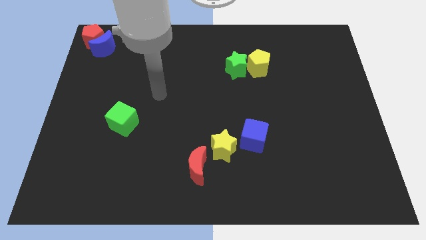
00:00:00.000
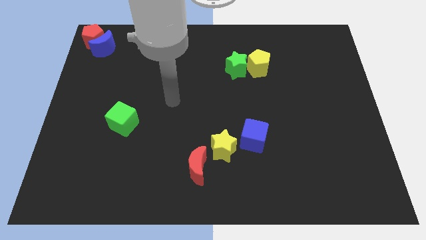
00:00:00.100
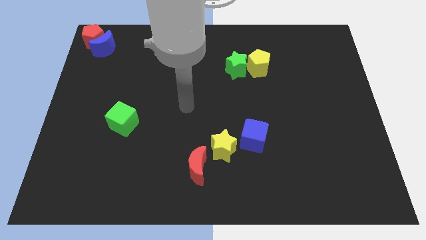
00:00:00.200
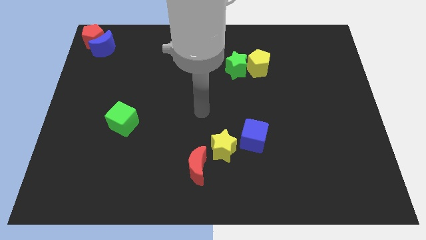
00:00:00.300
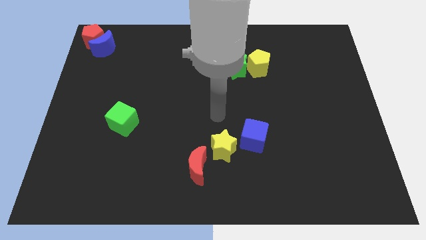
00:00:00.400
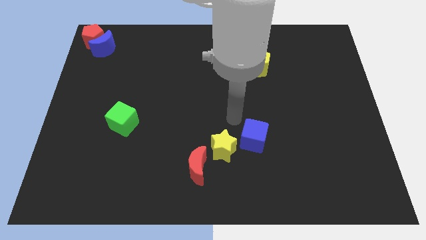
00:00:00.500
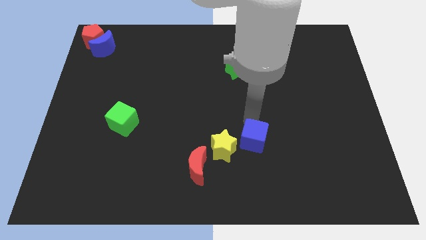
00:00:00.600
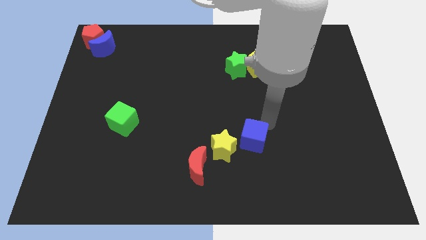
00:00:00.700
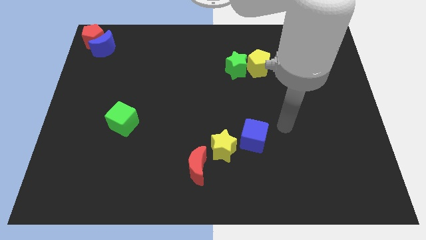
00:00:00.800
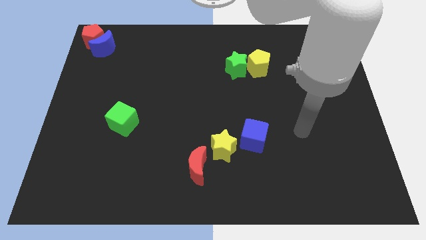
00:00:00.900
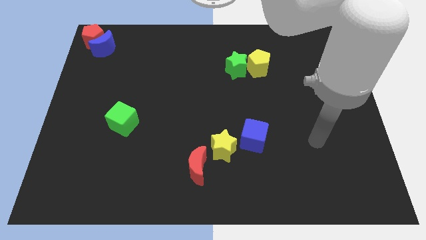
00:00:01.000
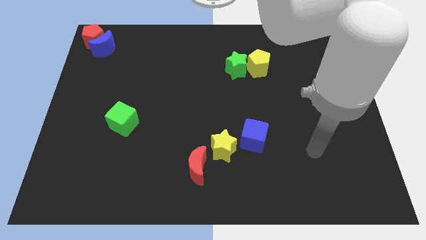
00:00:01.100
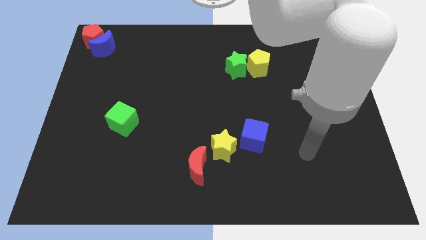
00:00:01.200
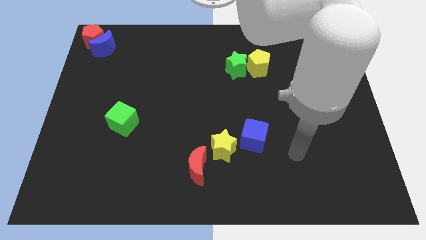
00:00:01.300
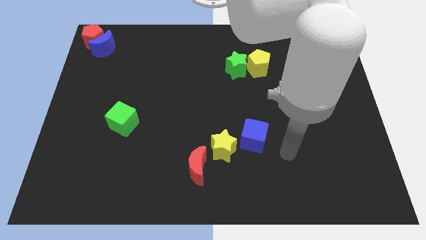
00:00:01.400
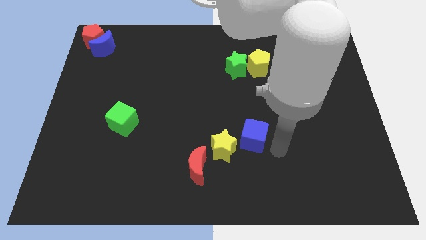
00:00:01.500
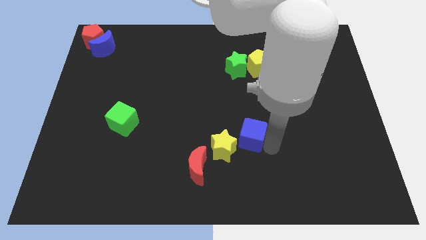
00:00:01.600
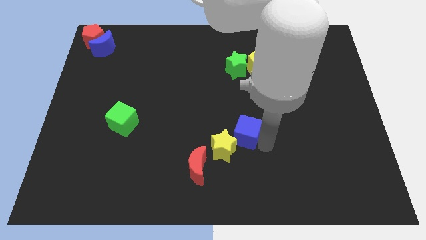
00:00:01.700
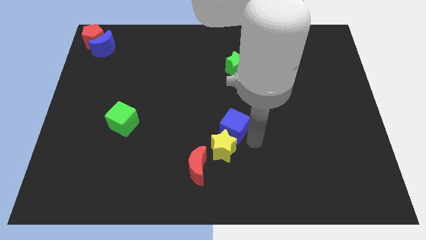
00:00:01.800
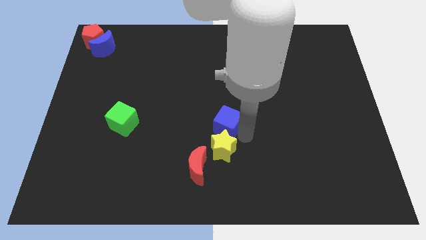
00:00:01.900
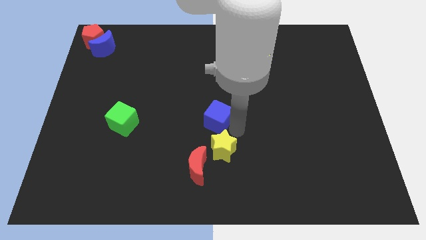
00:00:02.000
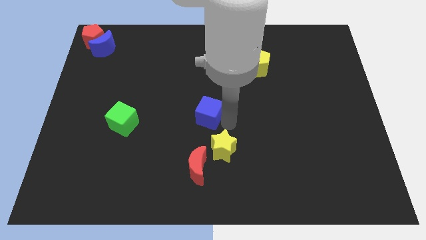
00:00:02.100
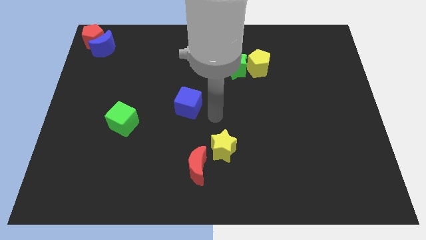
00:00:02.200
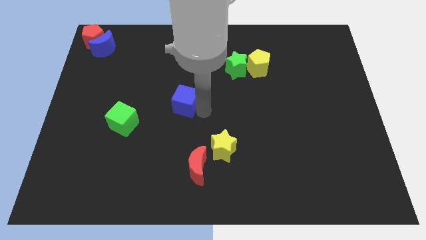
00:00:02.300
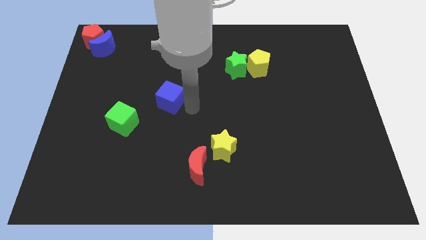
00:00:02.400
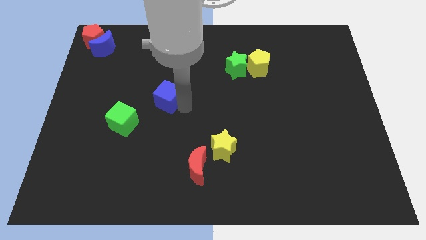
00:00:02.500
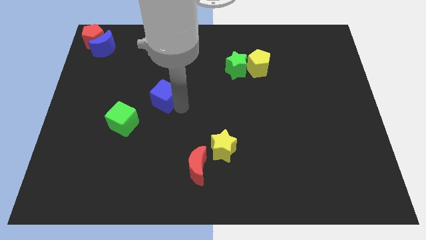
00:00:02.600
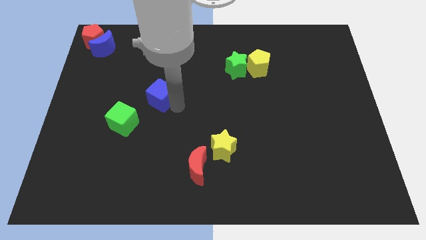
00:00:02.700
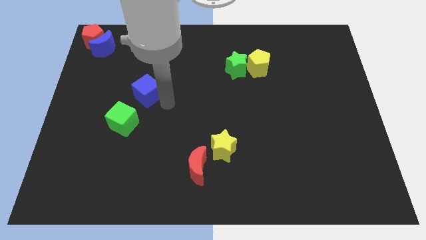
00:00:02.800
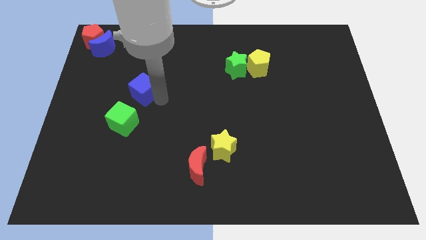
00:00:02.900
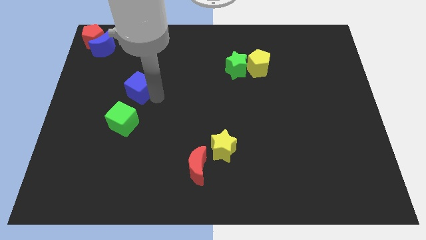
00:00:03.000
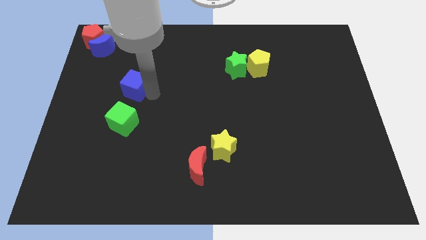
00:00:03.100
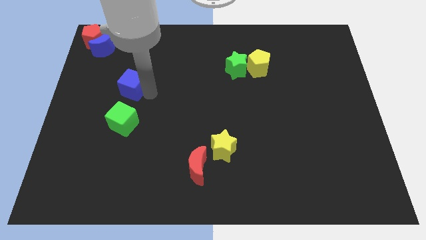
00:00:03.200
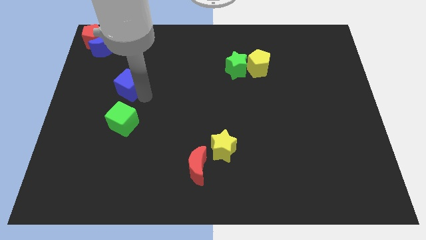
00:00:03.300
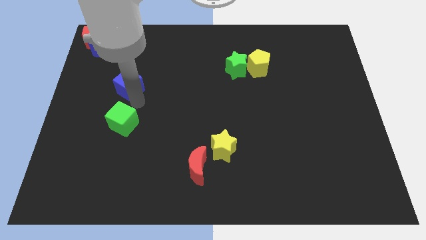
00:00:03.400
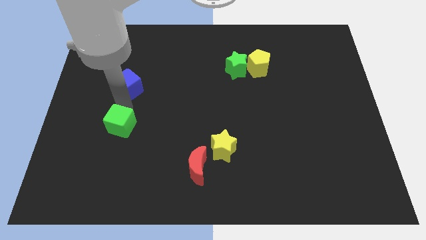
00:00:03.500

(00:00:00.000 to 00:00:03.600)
move the blue cube above the green cube

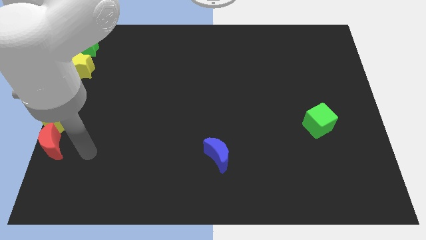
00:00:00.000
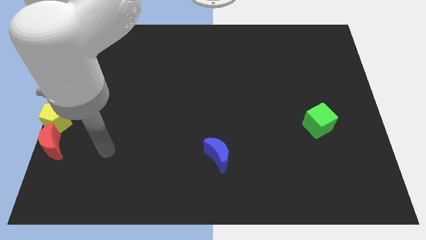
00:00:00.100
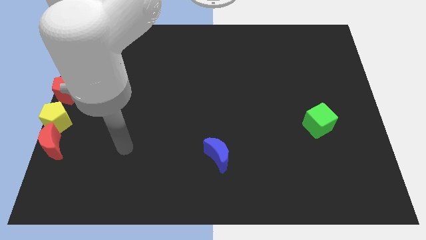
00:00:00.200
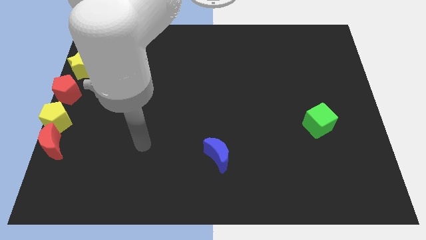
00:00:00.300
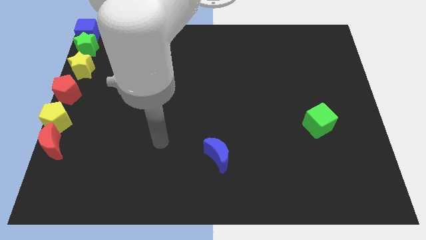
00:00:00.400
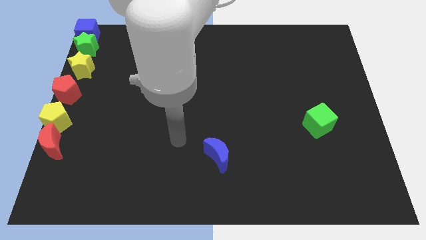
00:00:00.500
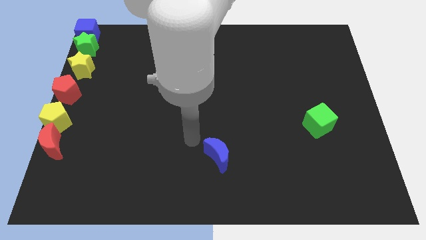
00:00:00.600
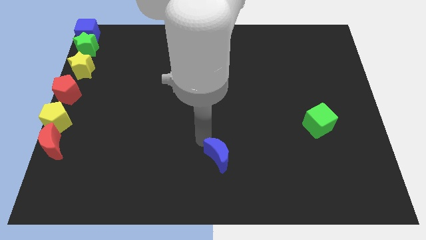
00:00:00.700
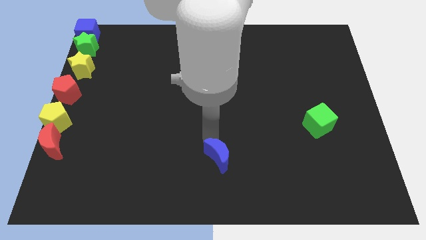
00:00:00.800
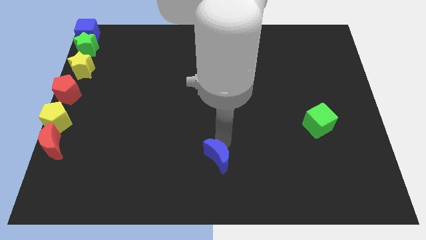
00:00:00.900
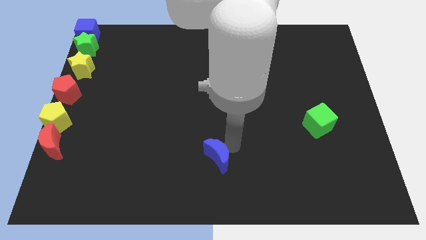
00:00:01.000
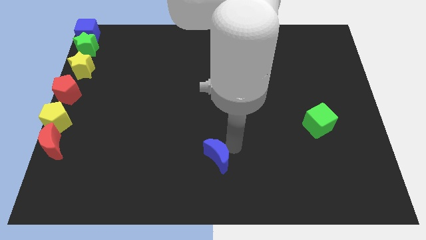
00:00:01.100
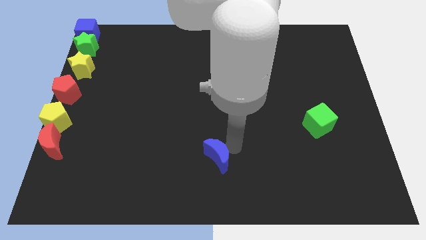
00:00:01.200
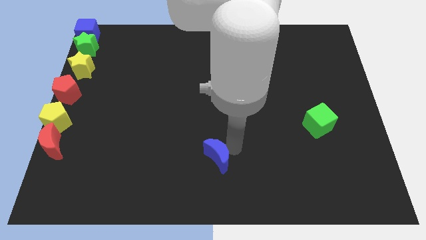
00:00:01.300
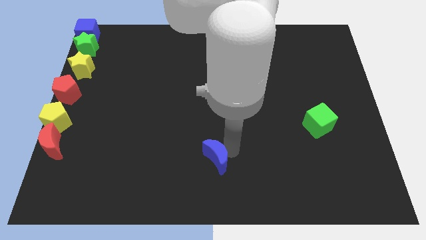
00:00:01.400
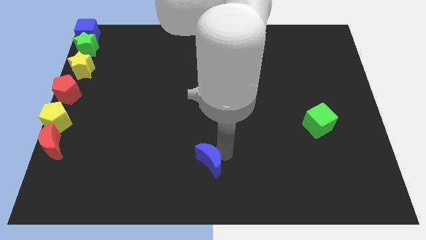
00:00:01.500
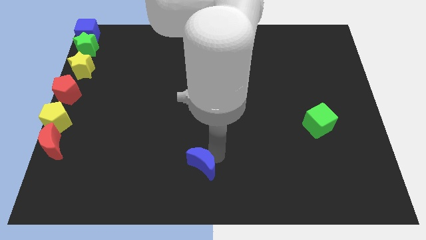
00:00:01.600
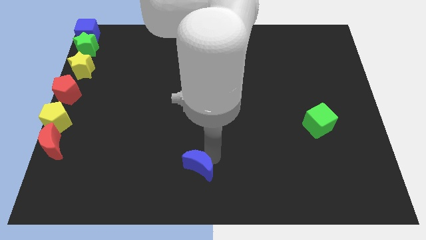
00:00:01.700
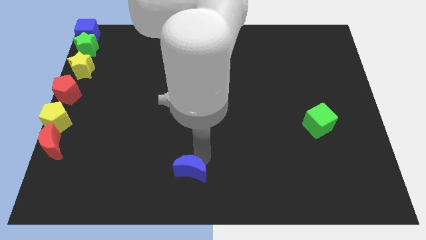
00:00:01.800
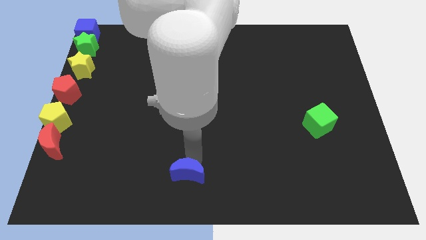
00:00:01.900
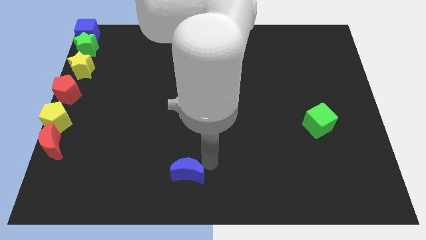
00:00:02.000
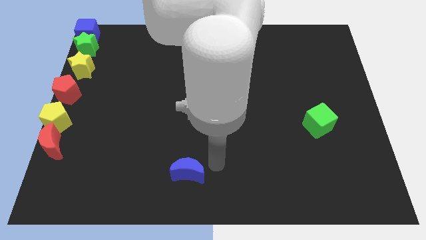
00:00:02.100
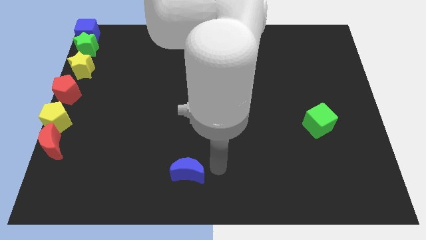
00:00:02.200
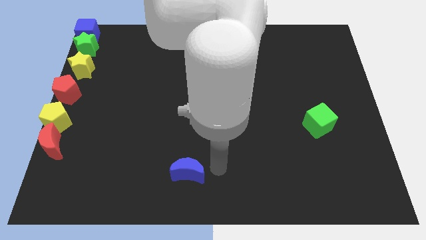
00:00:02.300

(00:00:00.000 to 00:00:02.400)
move the blue moon to bottom center

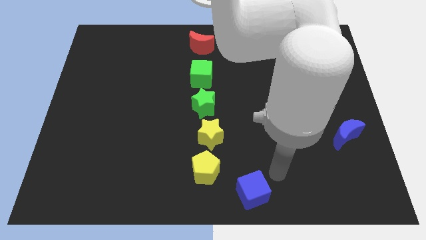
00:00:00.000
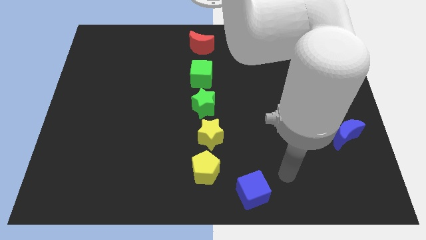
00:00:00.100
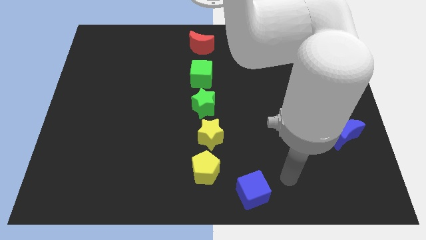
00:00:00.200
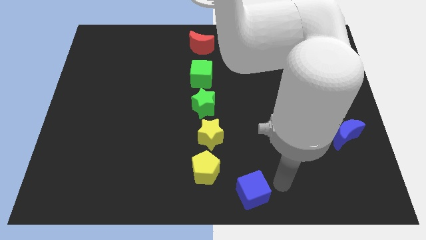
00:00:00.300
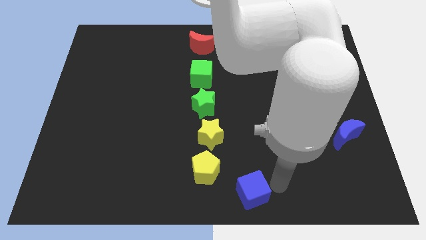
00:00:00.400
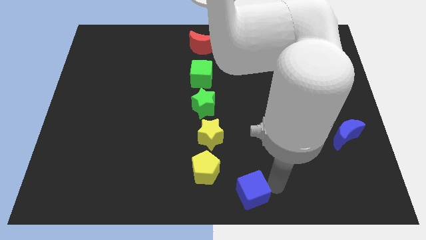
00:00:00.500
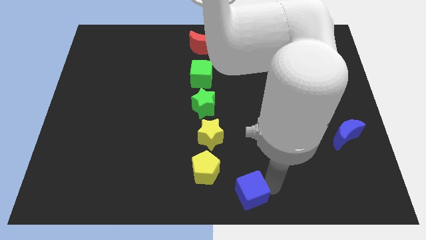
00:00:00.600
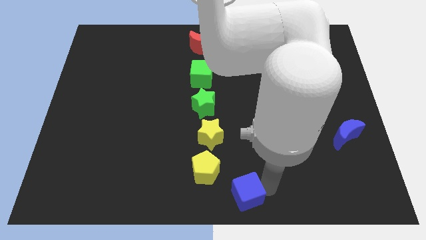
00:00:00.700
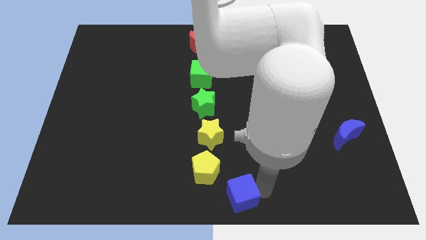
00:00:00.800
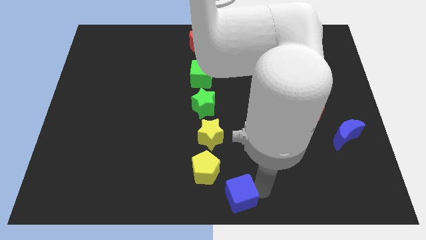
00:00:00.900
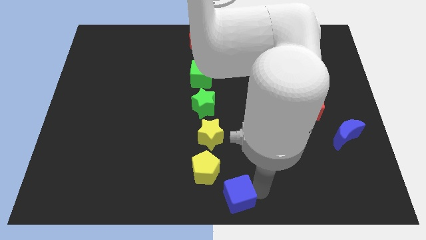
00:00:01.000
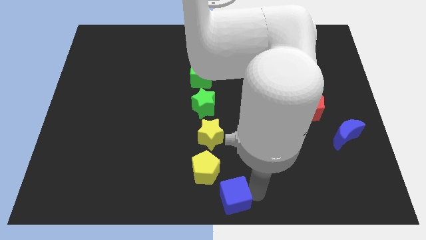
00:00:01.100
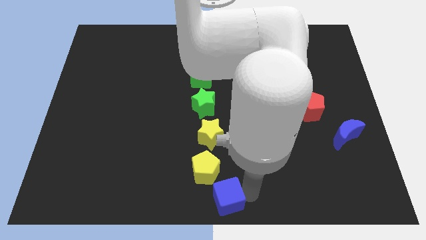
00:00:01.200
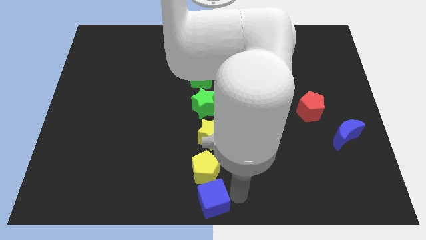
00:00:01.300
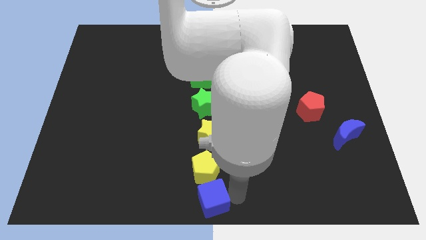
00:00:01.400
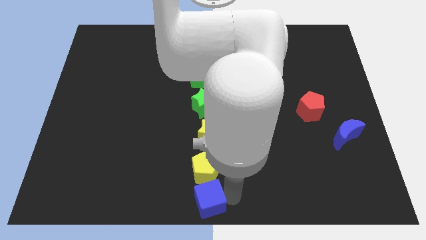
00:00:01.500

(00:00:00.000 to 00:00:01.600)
place the blue cube below the yellow pentagon

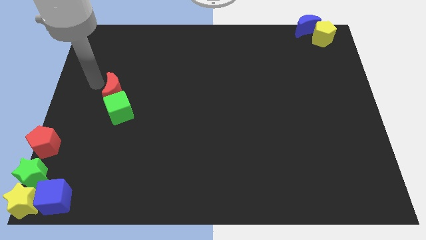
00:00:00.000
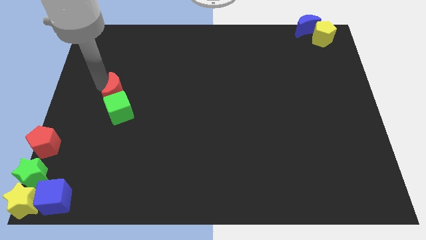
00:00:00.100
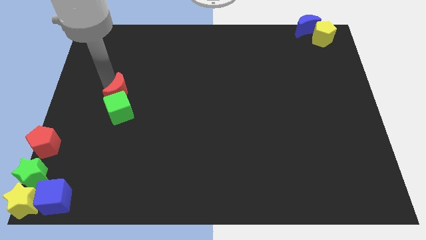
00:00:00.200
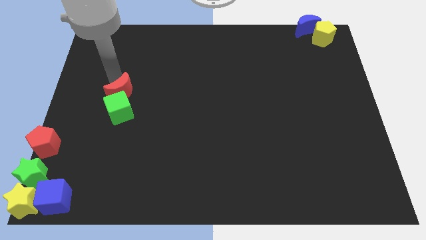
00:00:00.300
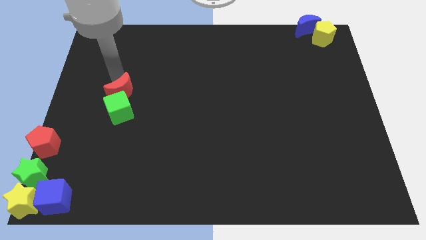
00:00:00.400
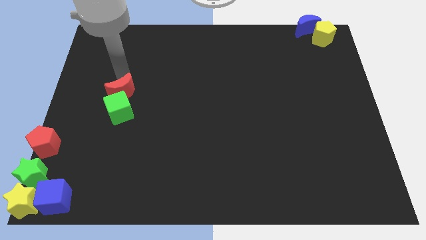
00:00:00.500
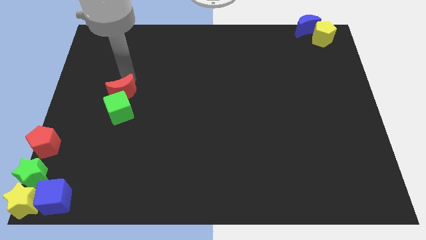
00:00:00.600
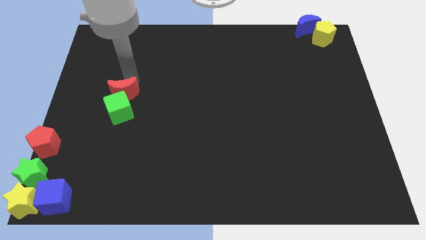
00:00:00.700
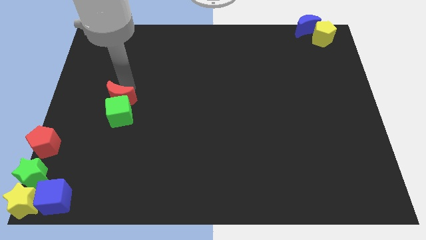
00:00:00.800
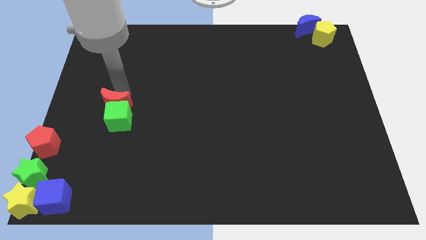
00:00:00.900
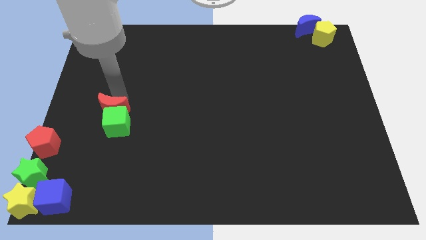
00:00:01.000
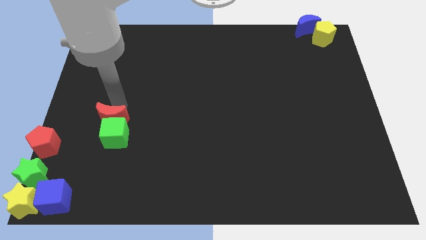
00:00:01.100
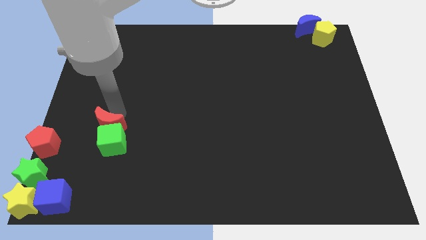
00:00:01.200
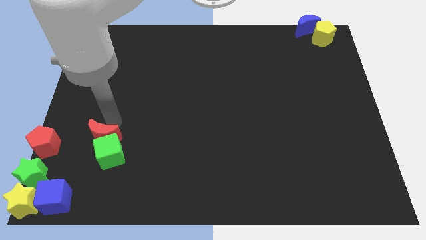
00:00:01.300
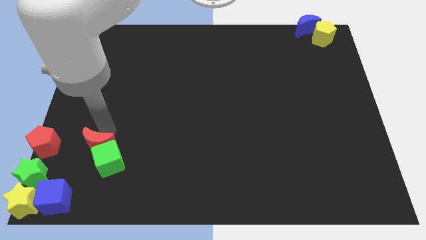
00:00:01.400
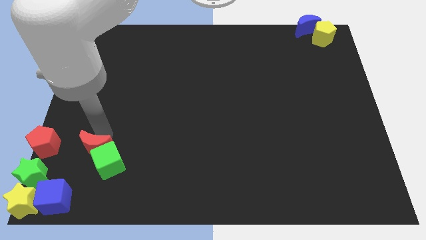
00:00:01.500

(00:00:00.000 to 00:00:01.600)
push the red moon along with the green cube towards the bottom of the board
